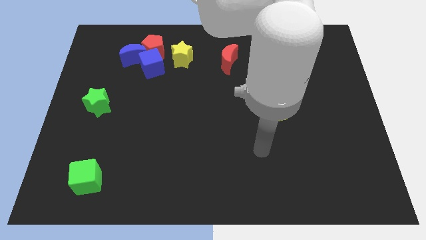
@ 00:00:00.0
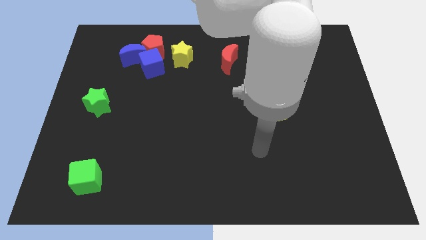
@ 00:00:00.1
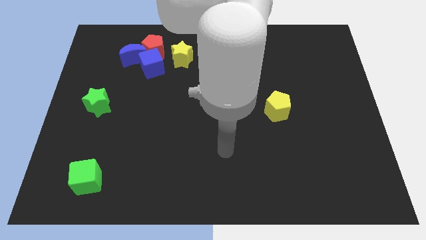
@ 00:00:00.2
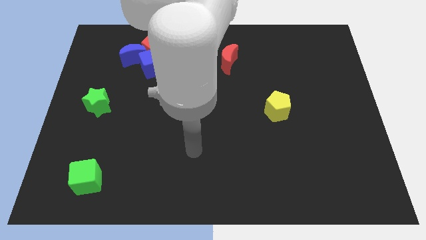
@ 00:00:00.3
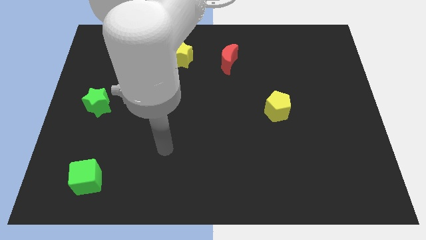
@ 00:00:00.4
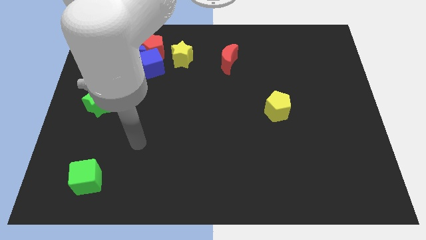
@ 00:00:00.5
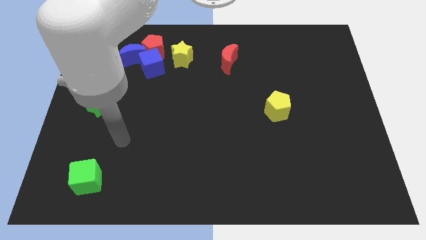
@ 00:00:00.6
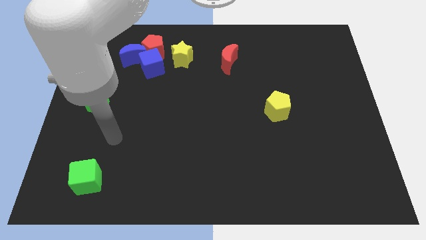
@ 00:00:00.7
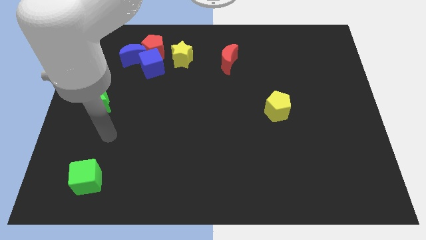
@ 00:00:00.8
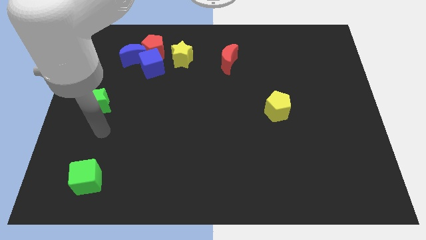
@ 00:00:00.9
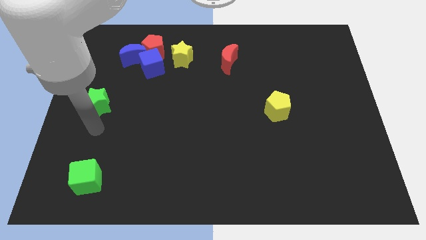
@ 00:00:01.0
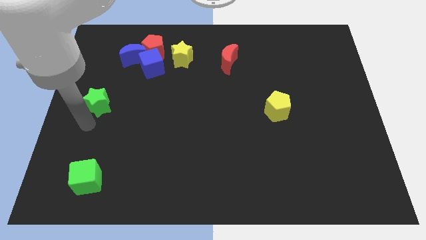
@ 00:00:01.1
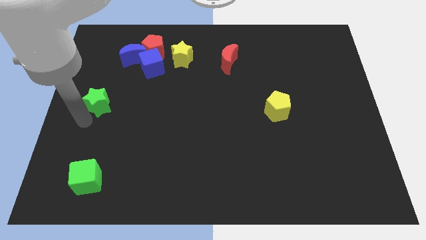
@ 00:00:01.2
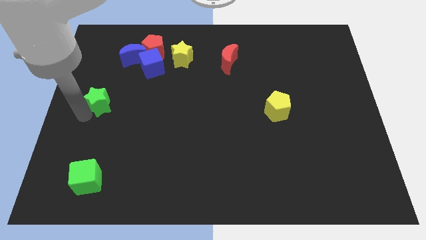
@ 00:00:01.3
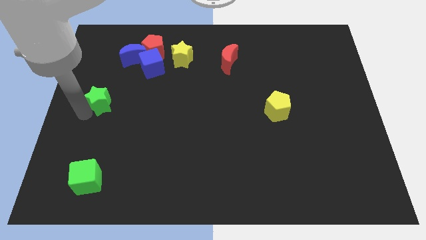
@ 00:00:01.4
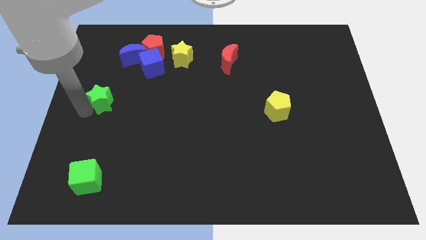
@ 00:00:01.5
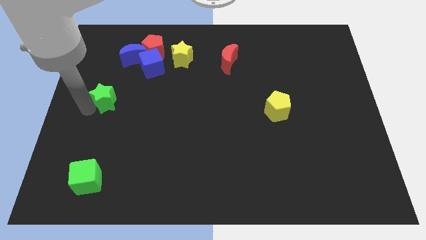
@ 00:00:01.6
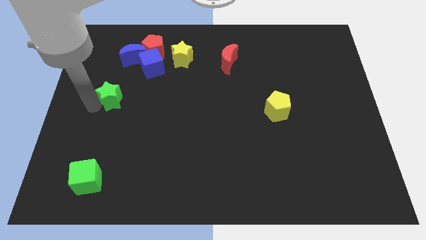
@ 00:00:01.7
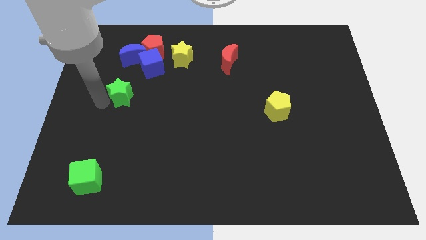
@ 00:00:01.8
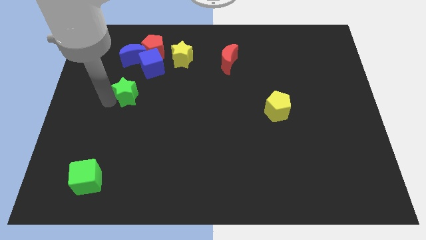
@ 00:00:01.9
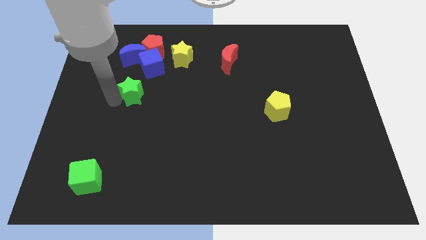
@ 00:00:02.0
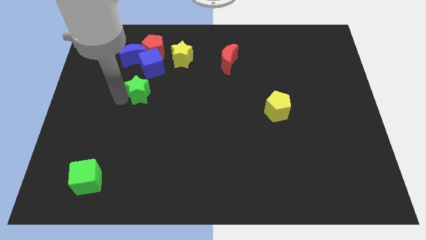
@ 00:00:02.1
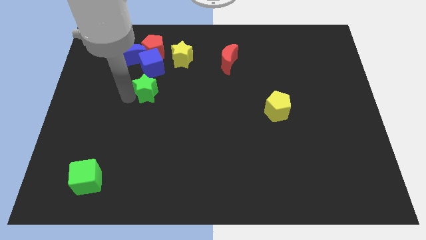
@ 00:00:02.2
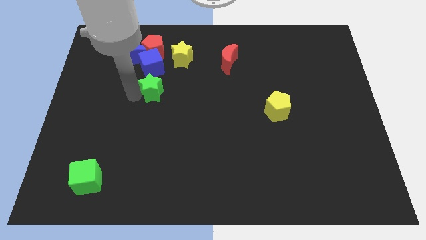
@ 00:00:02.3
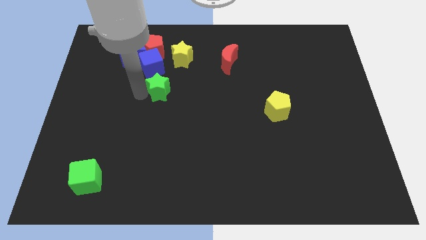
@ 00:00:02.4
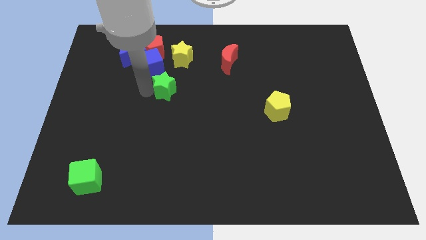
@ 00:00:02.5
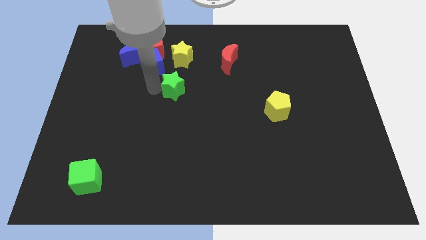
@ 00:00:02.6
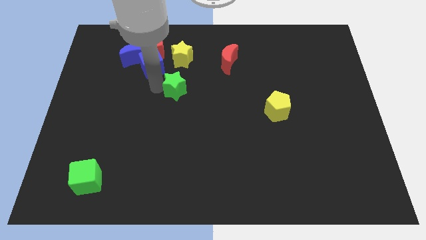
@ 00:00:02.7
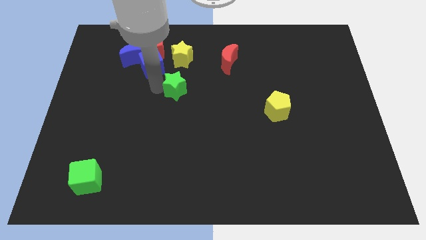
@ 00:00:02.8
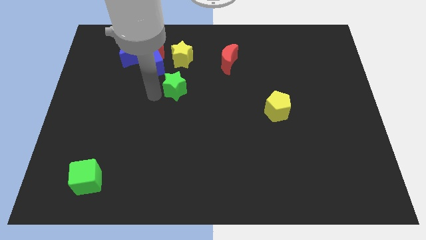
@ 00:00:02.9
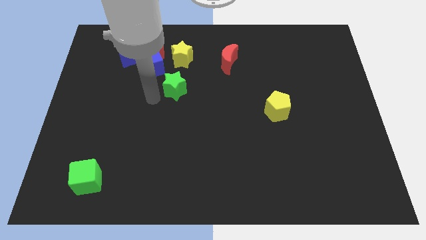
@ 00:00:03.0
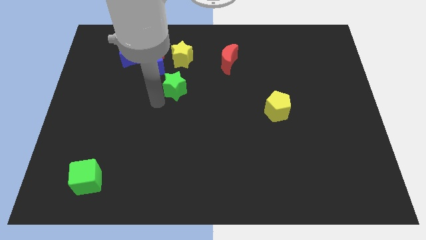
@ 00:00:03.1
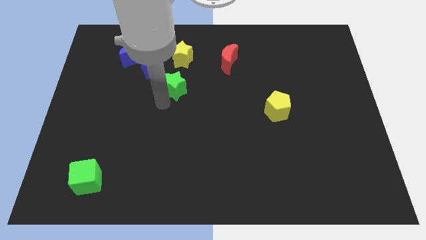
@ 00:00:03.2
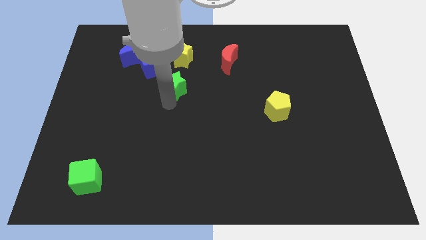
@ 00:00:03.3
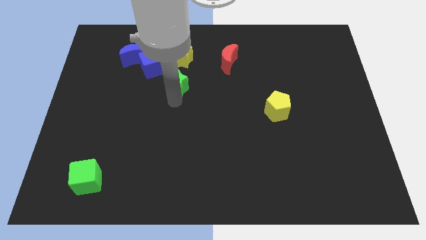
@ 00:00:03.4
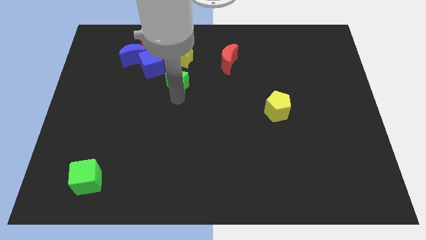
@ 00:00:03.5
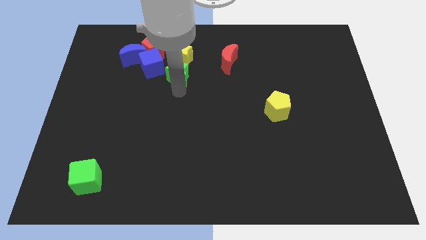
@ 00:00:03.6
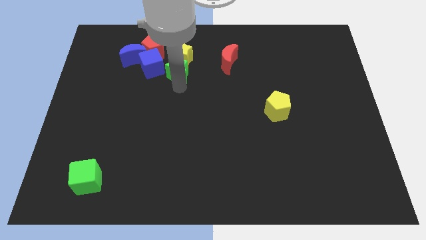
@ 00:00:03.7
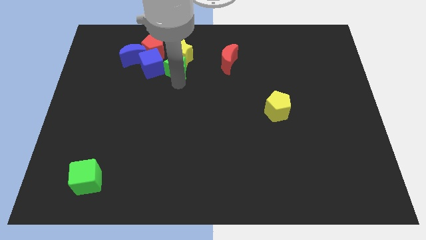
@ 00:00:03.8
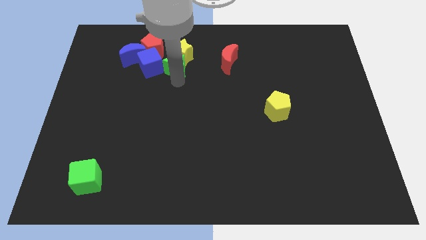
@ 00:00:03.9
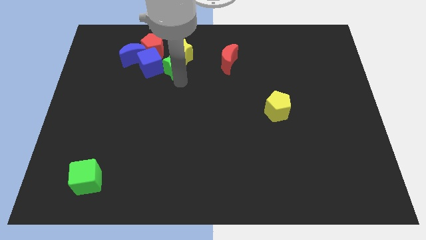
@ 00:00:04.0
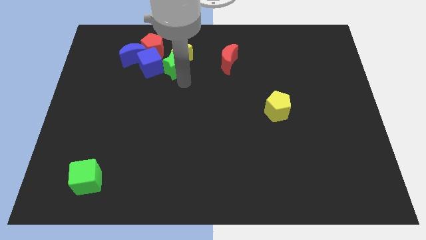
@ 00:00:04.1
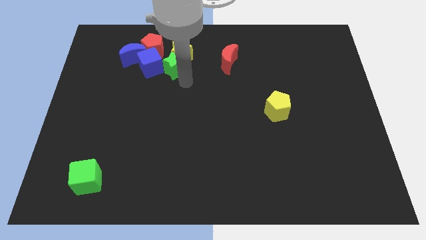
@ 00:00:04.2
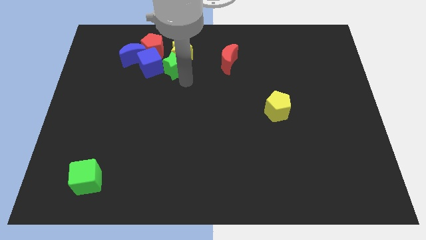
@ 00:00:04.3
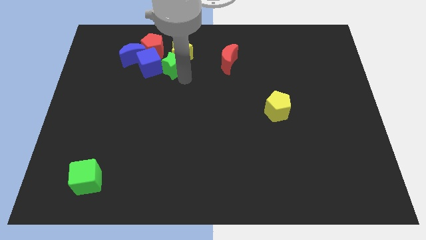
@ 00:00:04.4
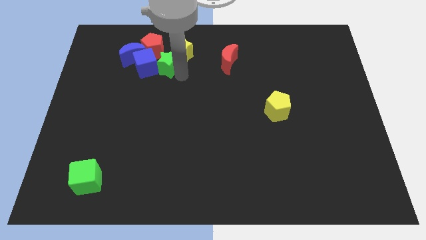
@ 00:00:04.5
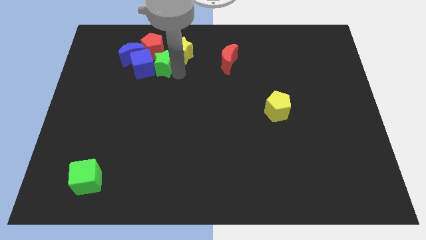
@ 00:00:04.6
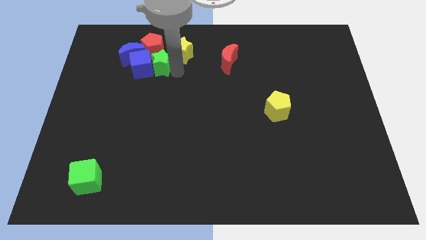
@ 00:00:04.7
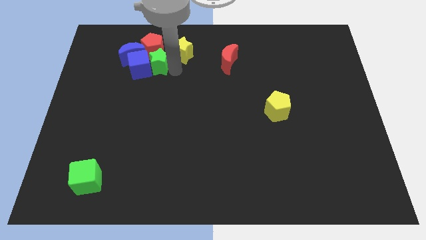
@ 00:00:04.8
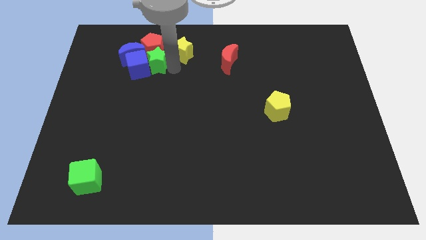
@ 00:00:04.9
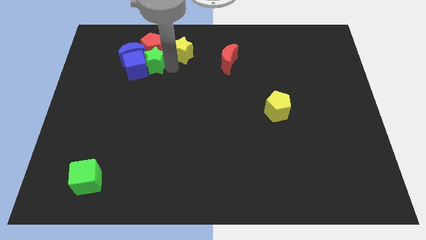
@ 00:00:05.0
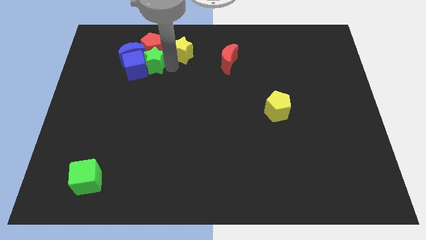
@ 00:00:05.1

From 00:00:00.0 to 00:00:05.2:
put the green star next to the red pentagon

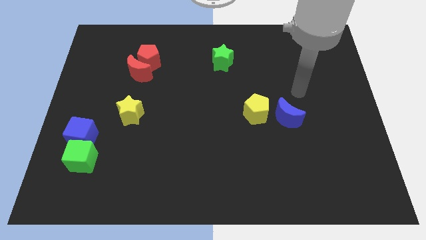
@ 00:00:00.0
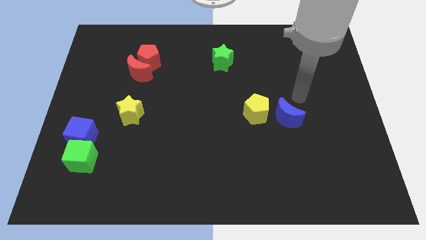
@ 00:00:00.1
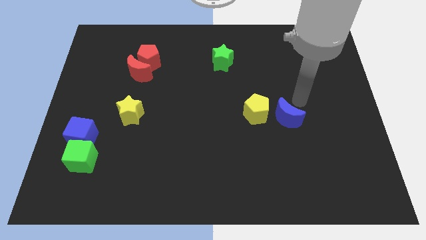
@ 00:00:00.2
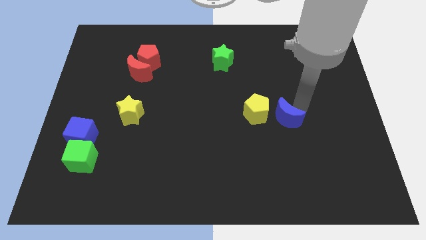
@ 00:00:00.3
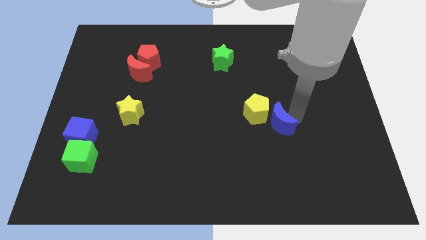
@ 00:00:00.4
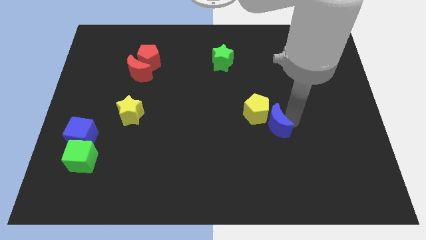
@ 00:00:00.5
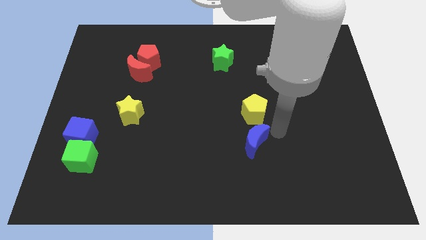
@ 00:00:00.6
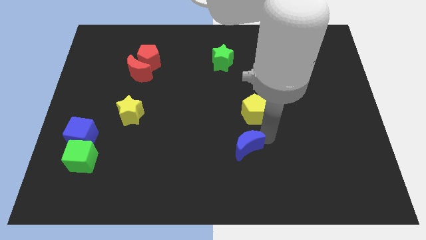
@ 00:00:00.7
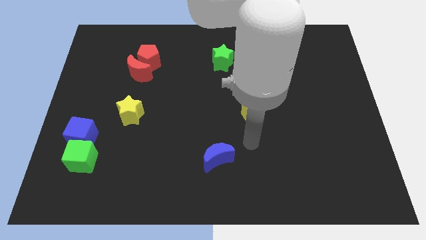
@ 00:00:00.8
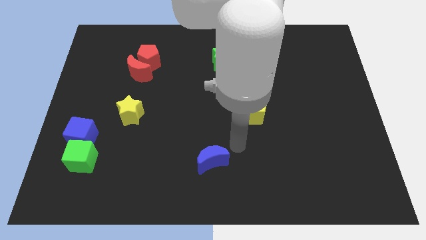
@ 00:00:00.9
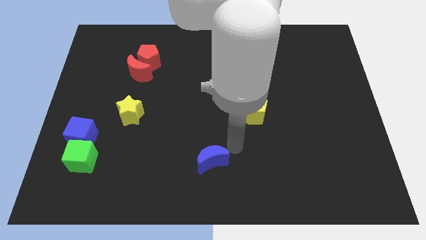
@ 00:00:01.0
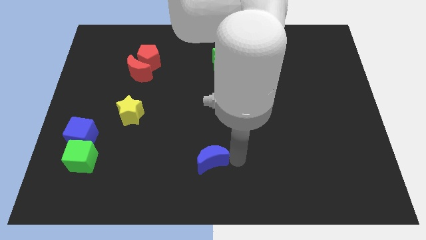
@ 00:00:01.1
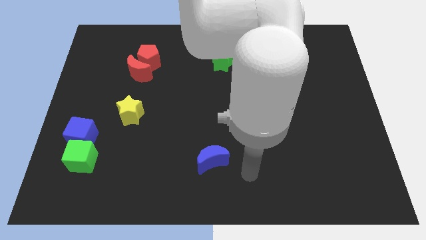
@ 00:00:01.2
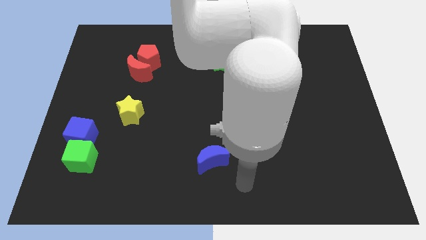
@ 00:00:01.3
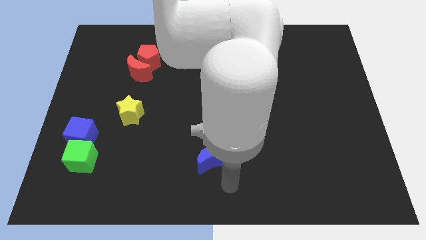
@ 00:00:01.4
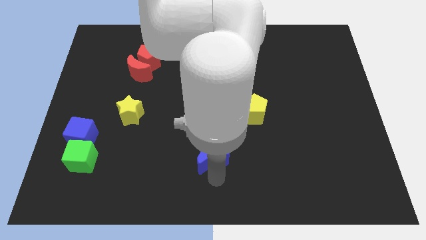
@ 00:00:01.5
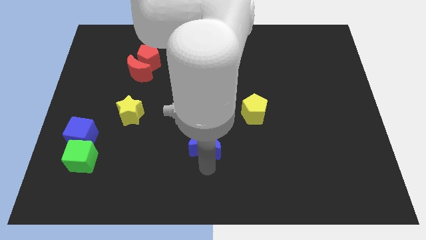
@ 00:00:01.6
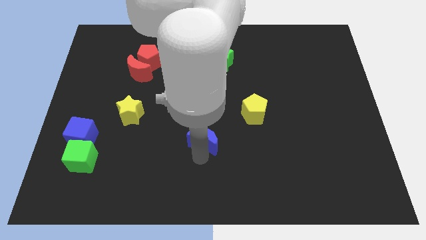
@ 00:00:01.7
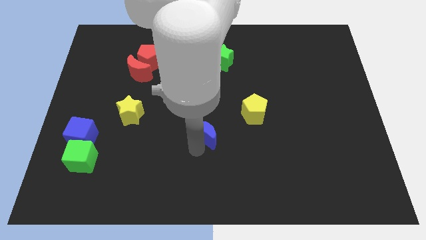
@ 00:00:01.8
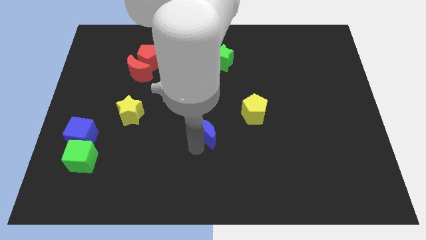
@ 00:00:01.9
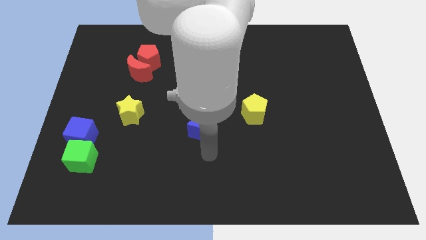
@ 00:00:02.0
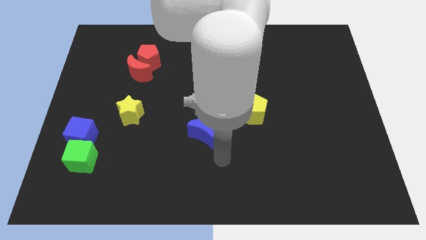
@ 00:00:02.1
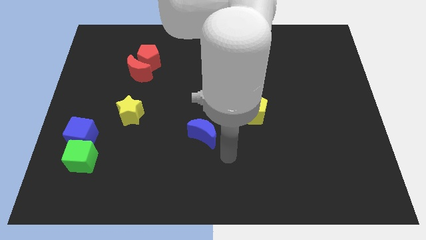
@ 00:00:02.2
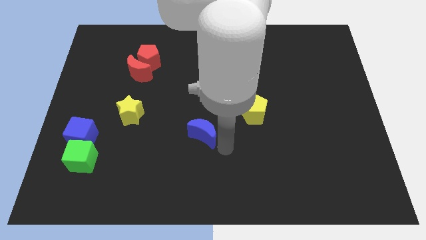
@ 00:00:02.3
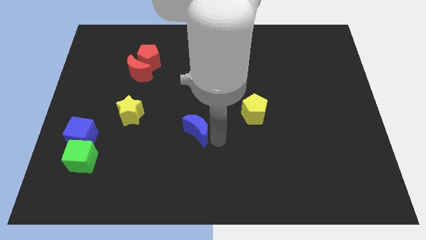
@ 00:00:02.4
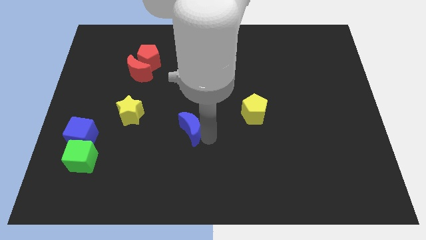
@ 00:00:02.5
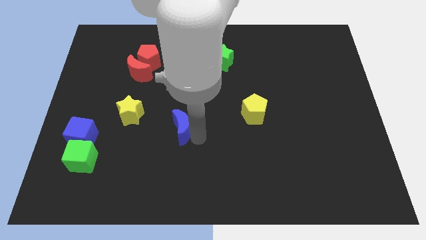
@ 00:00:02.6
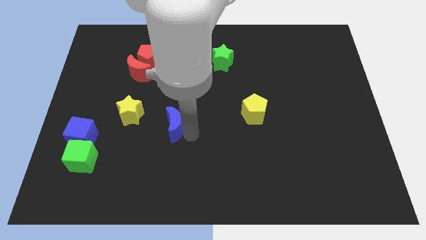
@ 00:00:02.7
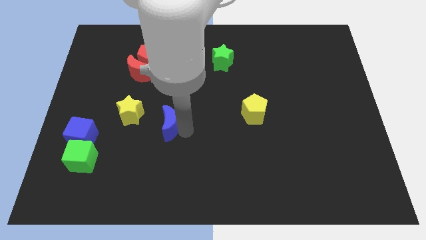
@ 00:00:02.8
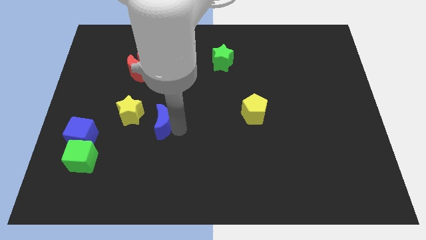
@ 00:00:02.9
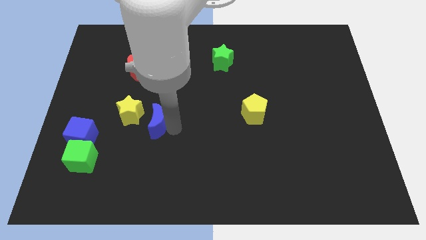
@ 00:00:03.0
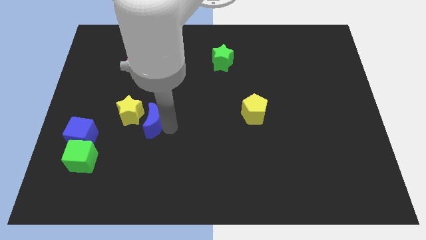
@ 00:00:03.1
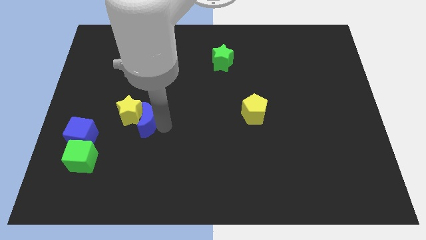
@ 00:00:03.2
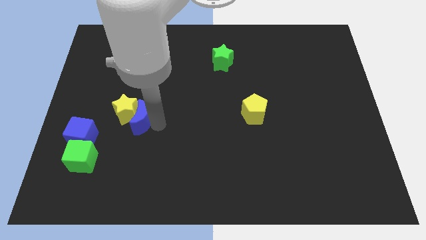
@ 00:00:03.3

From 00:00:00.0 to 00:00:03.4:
push the blue moon to the yellow star
